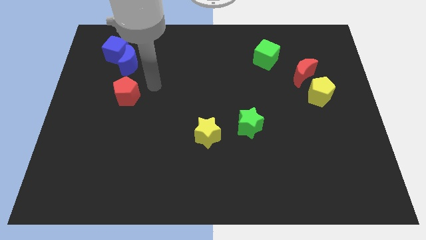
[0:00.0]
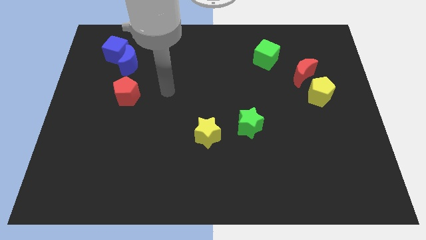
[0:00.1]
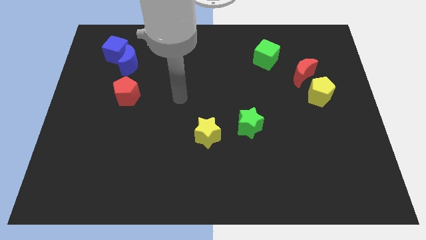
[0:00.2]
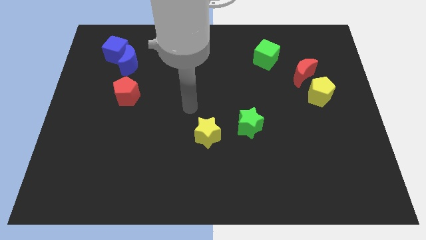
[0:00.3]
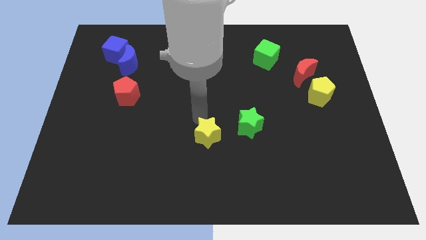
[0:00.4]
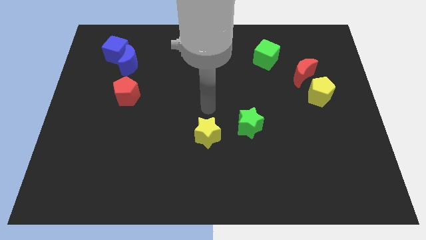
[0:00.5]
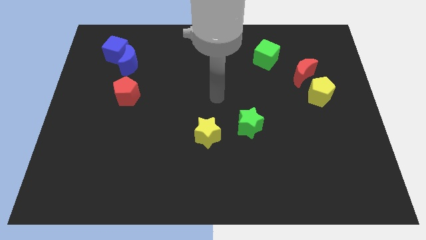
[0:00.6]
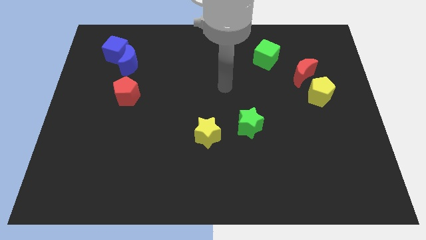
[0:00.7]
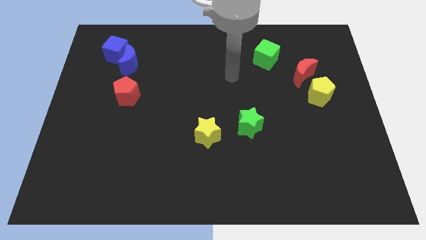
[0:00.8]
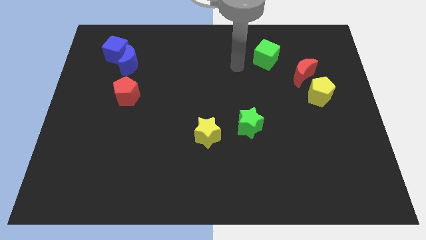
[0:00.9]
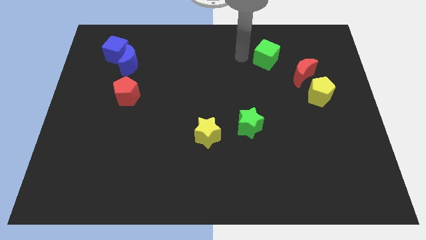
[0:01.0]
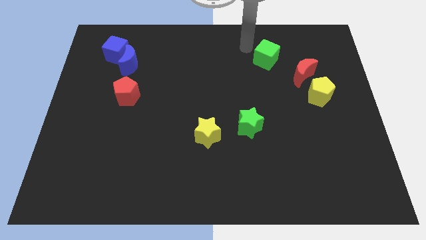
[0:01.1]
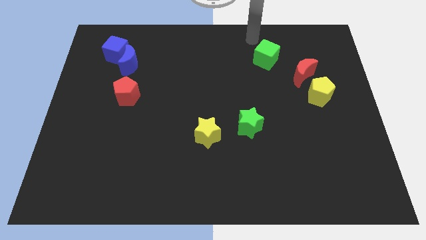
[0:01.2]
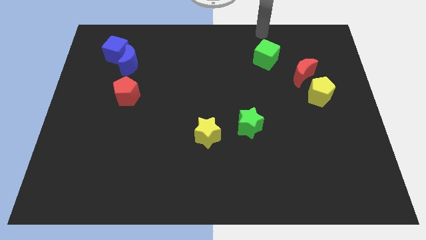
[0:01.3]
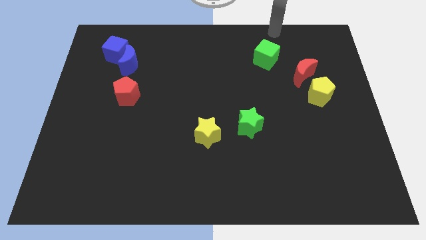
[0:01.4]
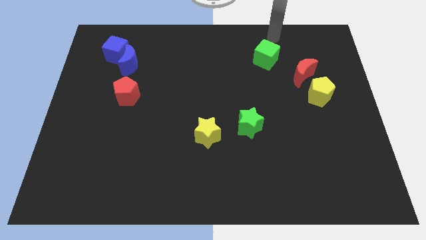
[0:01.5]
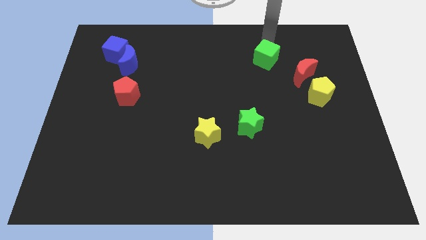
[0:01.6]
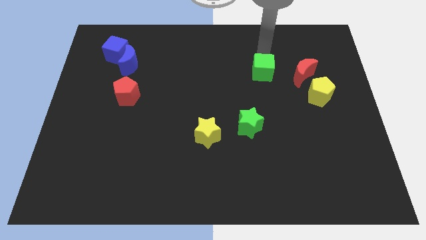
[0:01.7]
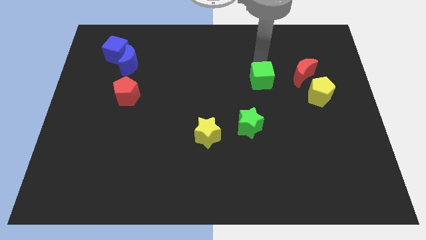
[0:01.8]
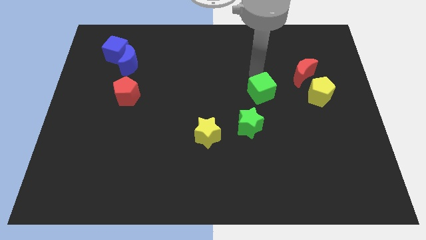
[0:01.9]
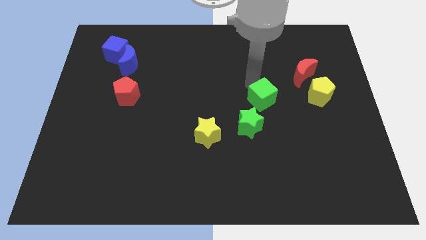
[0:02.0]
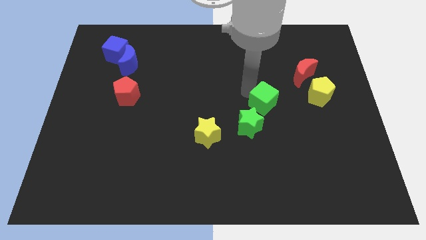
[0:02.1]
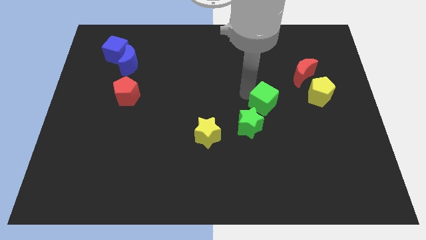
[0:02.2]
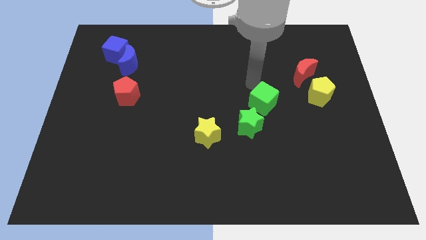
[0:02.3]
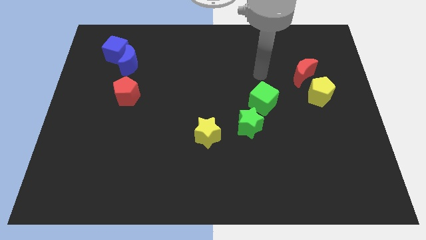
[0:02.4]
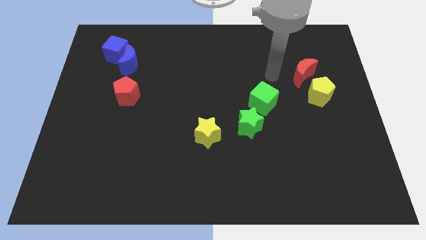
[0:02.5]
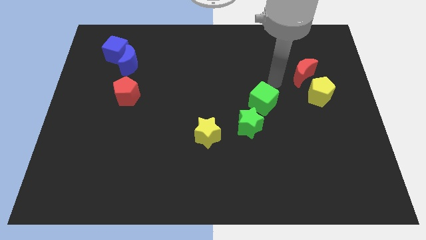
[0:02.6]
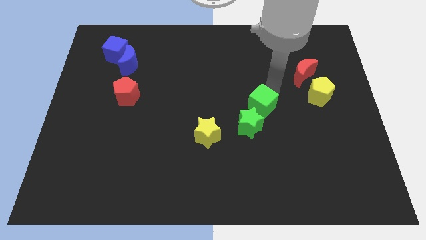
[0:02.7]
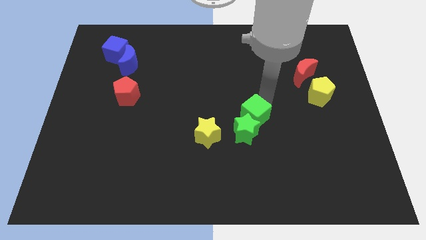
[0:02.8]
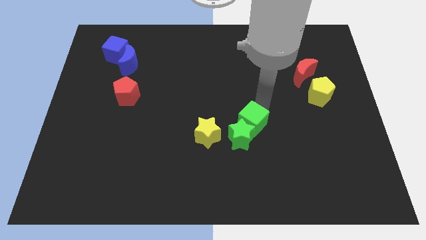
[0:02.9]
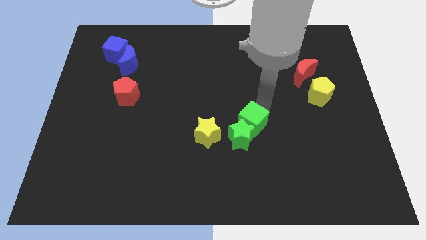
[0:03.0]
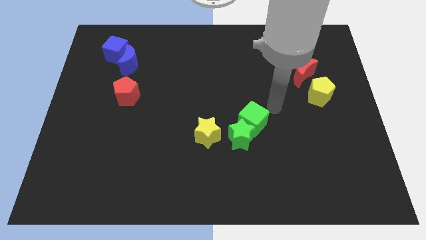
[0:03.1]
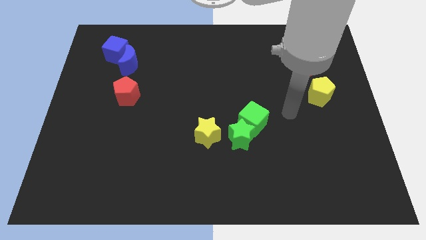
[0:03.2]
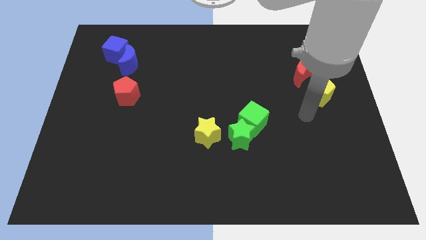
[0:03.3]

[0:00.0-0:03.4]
push the green cube into the green star

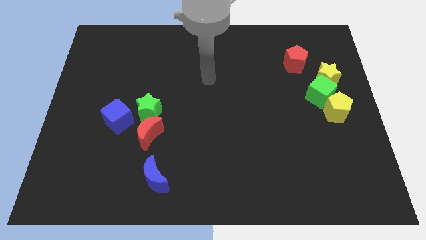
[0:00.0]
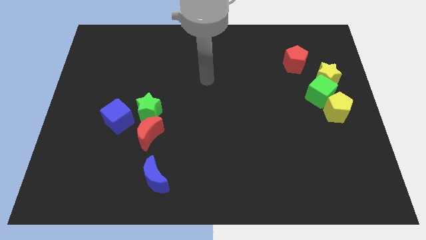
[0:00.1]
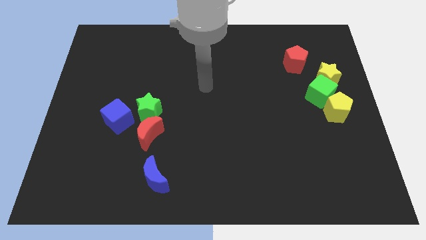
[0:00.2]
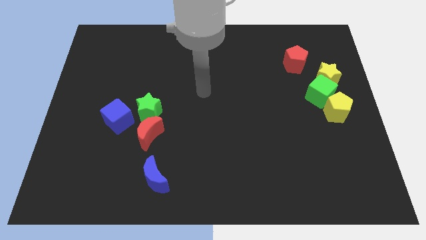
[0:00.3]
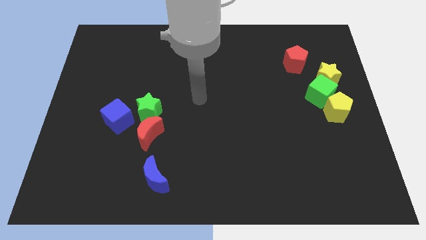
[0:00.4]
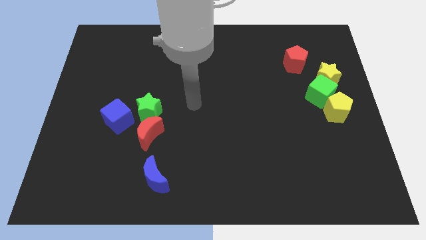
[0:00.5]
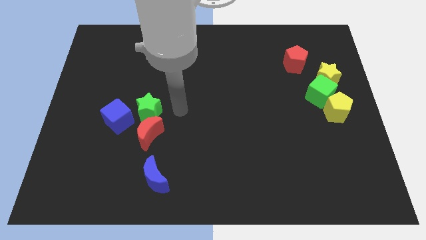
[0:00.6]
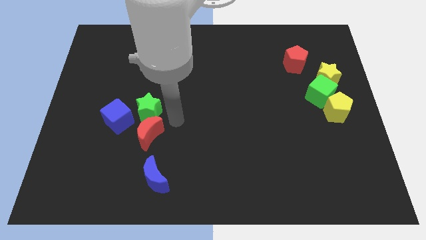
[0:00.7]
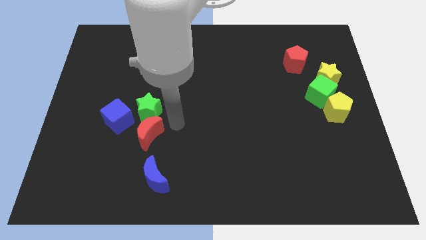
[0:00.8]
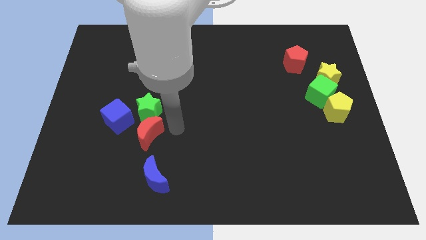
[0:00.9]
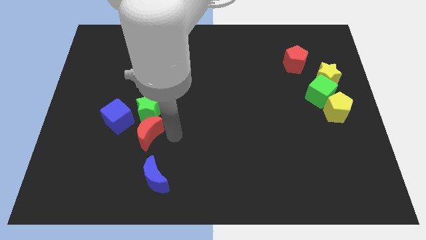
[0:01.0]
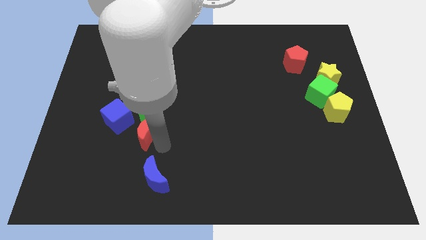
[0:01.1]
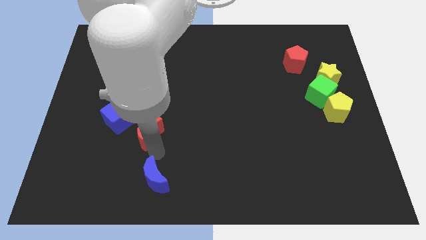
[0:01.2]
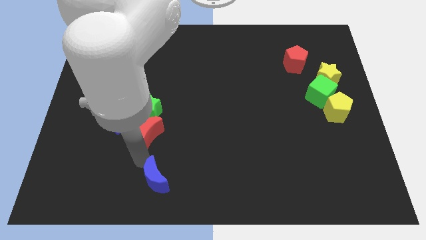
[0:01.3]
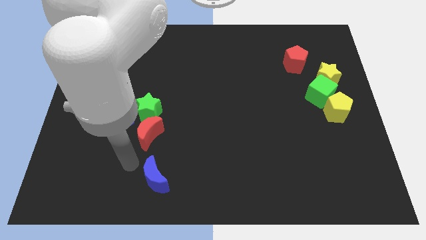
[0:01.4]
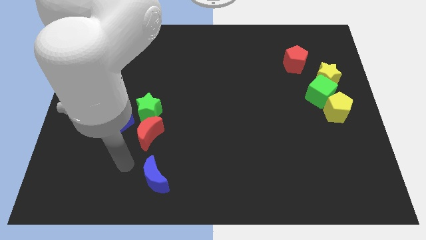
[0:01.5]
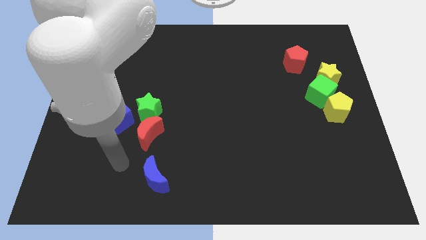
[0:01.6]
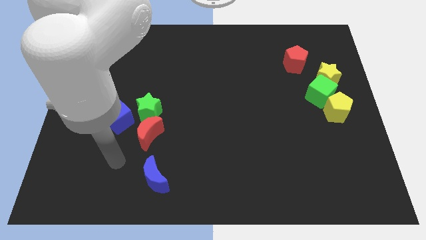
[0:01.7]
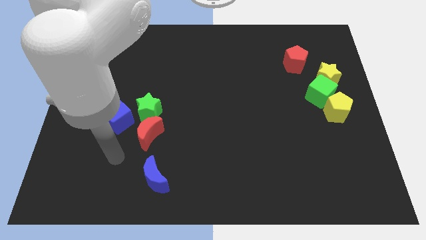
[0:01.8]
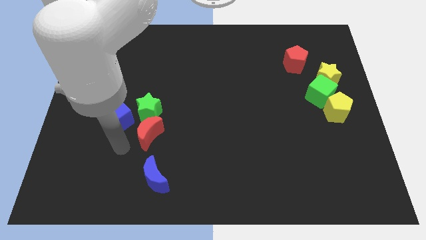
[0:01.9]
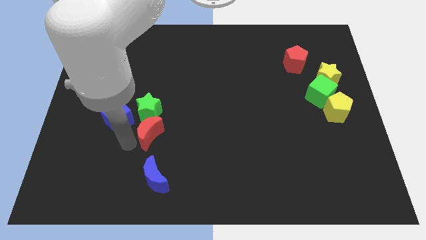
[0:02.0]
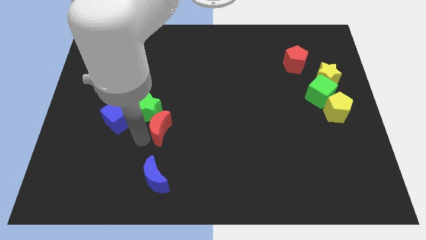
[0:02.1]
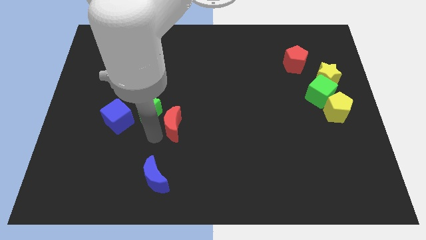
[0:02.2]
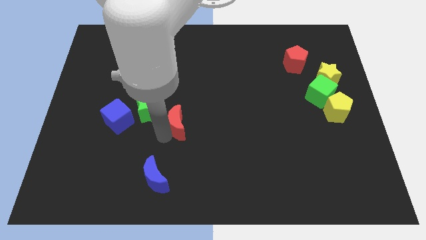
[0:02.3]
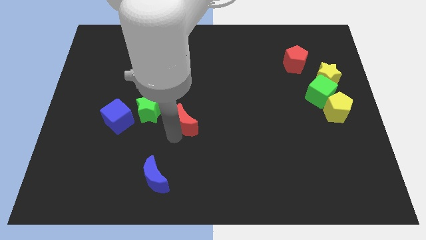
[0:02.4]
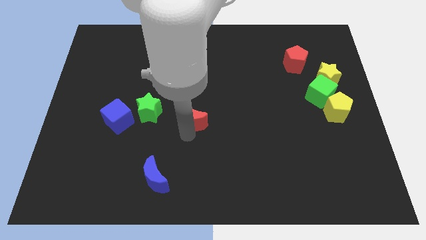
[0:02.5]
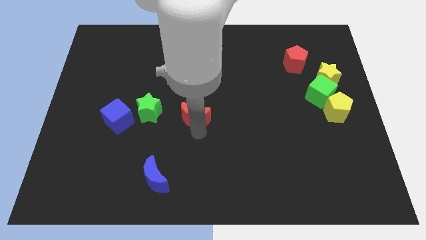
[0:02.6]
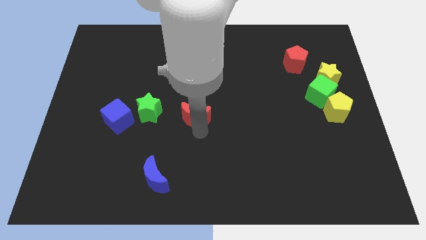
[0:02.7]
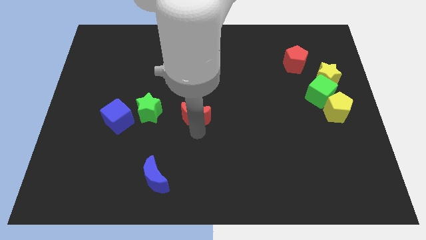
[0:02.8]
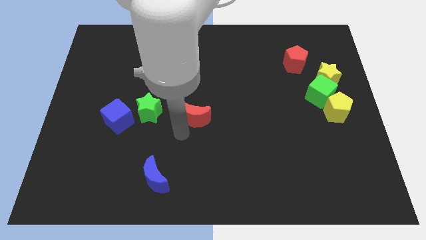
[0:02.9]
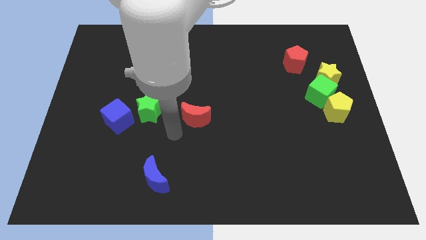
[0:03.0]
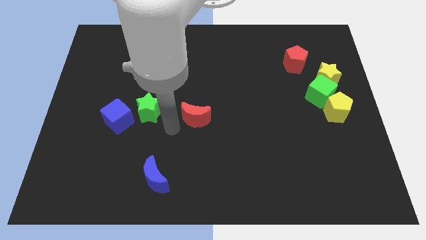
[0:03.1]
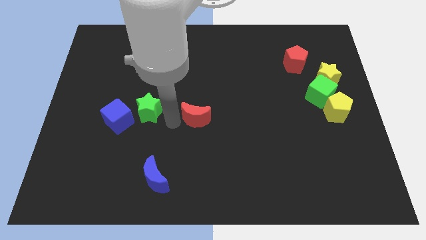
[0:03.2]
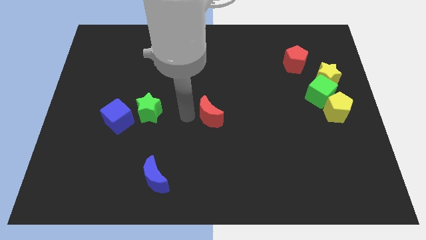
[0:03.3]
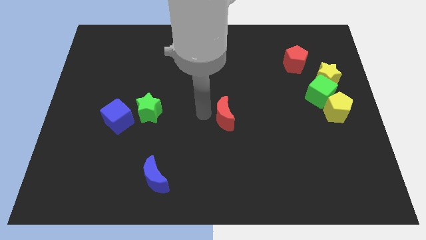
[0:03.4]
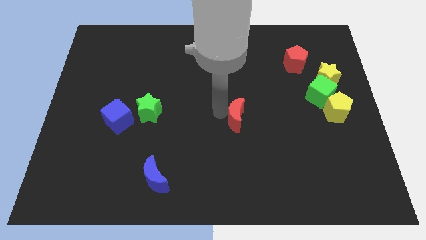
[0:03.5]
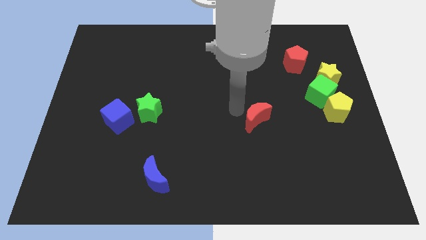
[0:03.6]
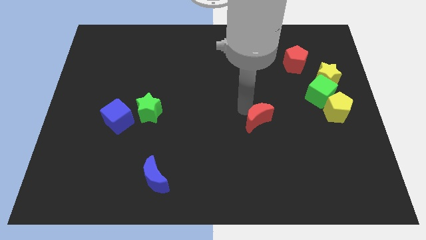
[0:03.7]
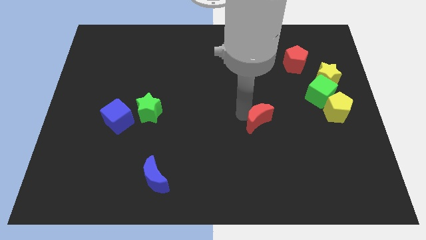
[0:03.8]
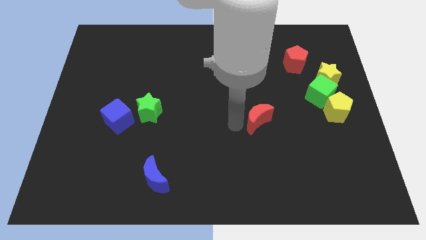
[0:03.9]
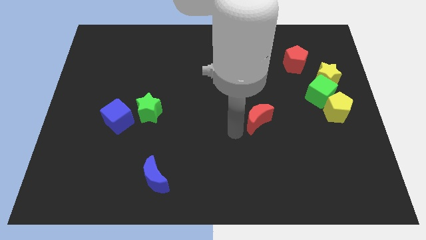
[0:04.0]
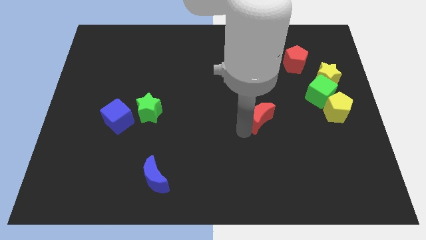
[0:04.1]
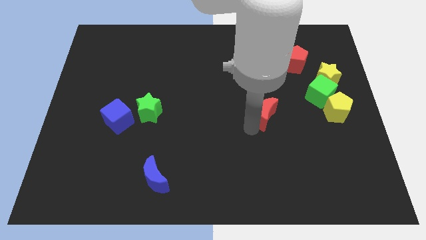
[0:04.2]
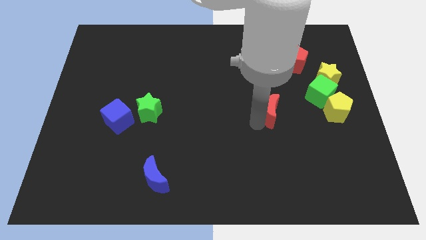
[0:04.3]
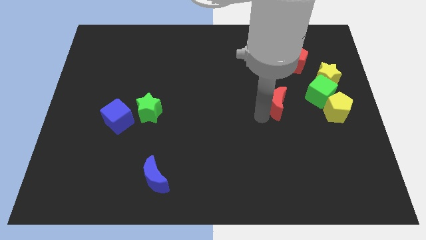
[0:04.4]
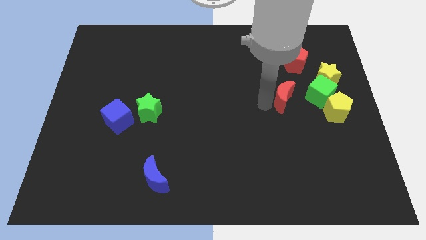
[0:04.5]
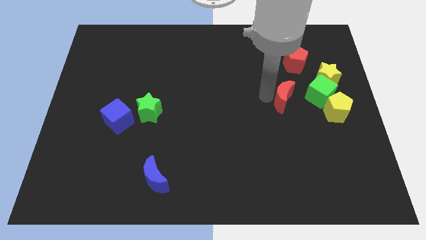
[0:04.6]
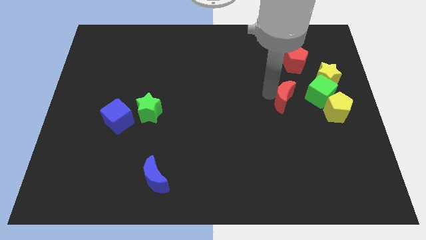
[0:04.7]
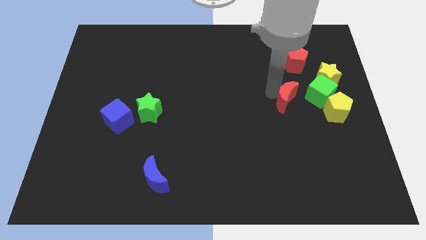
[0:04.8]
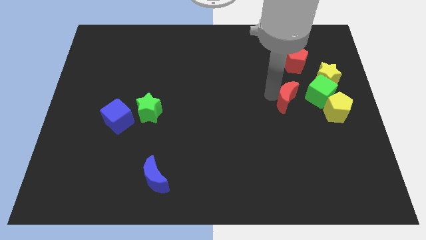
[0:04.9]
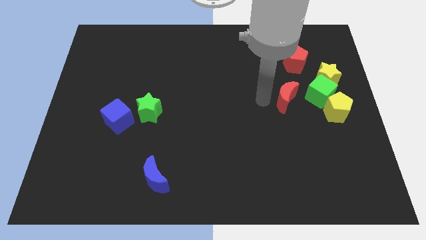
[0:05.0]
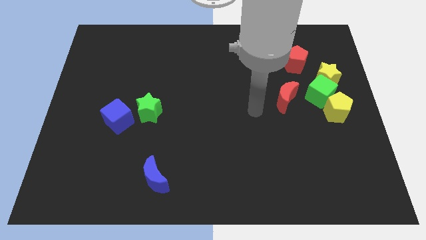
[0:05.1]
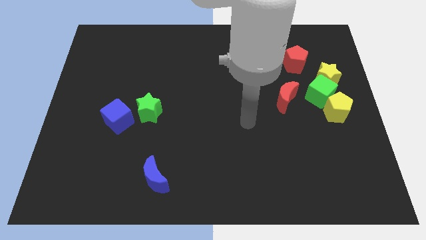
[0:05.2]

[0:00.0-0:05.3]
move the red crescente to the left of the green cube

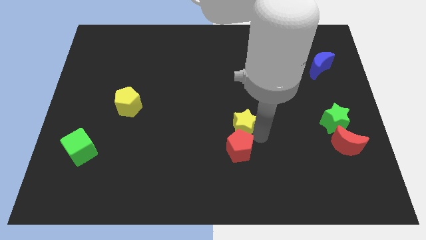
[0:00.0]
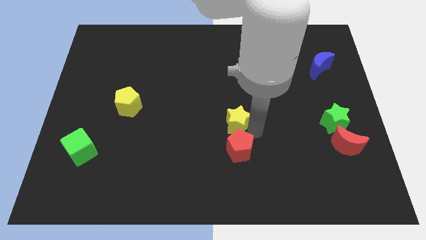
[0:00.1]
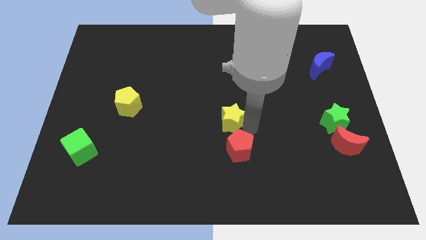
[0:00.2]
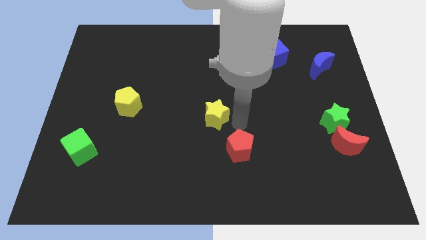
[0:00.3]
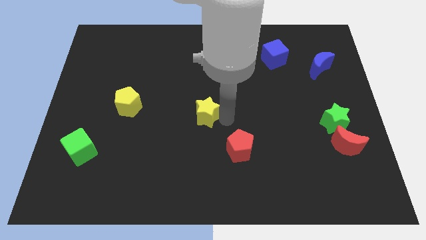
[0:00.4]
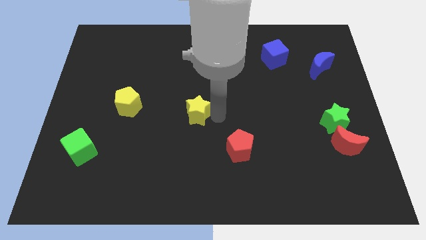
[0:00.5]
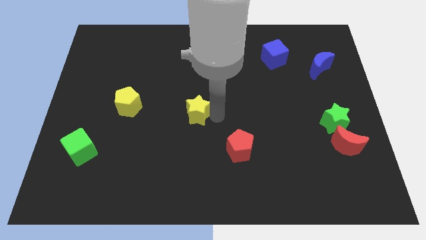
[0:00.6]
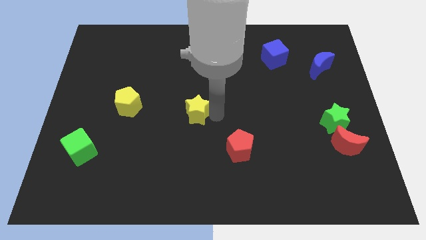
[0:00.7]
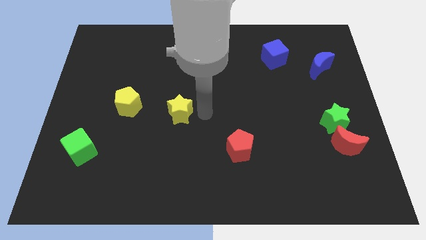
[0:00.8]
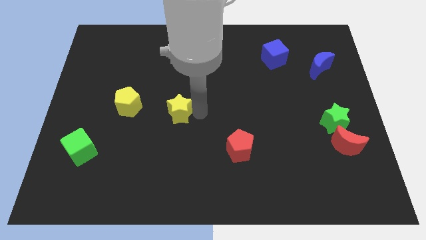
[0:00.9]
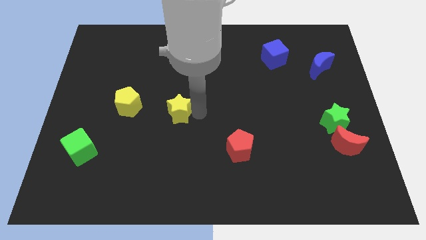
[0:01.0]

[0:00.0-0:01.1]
move the yellow star towards yellow pentagon
